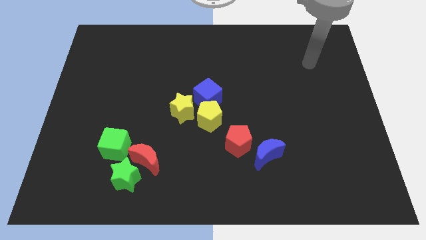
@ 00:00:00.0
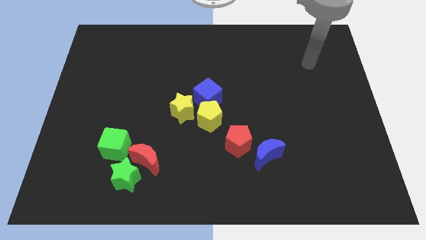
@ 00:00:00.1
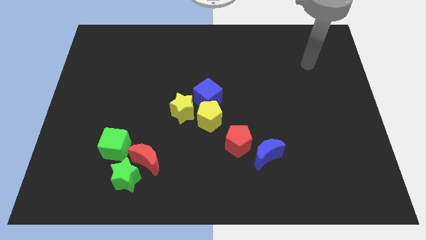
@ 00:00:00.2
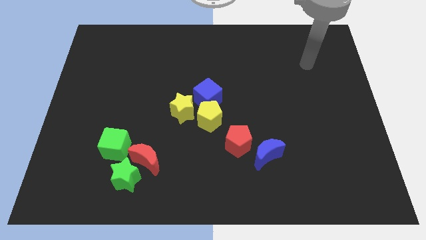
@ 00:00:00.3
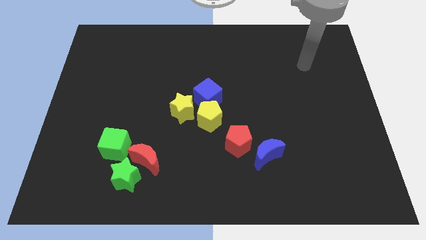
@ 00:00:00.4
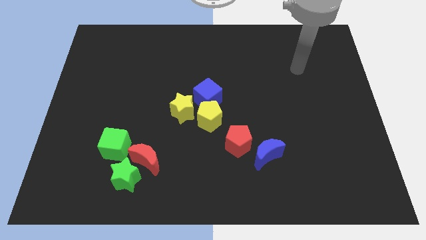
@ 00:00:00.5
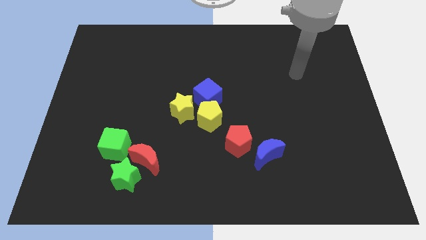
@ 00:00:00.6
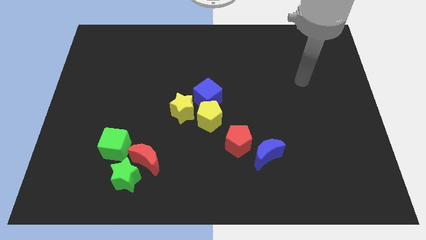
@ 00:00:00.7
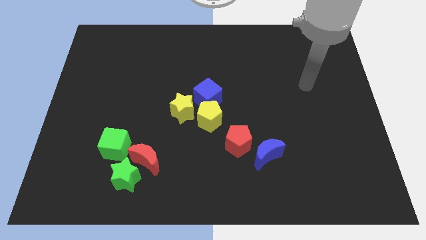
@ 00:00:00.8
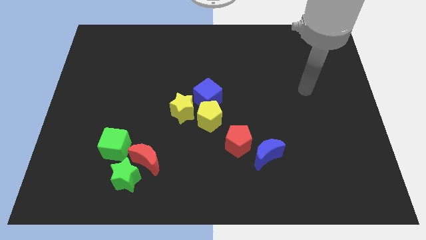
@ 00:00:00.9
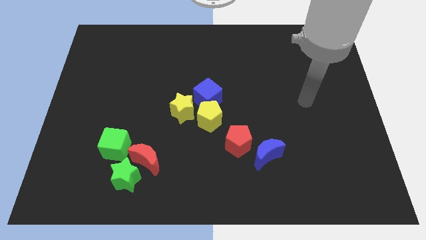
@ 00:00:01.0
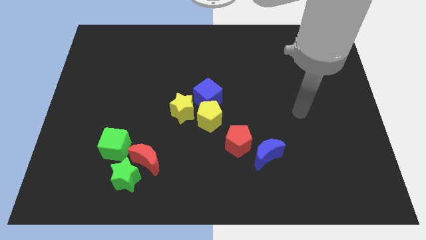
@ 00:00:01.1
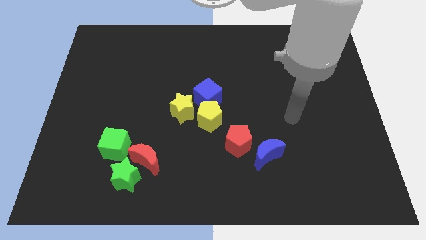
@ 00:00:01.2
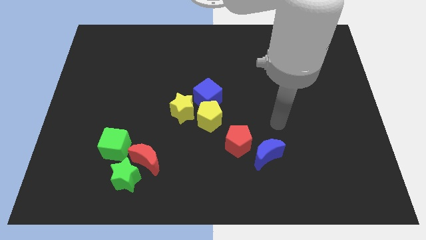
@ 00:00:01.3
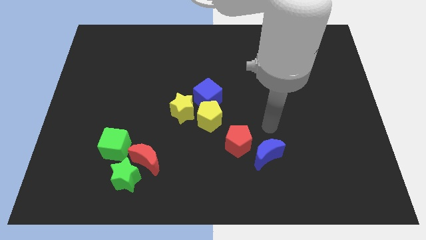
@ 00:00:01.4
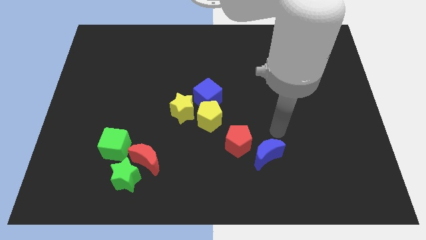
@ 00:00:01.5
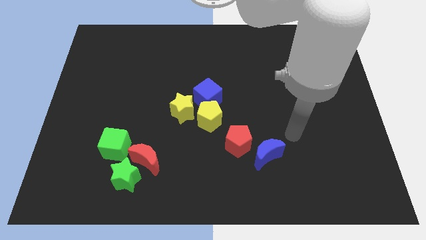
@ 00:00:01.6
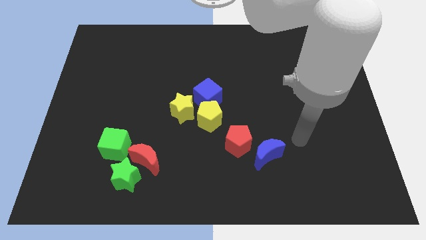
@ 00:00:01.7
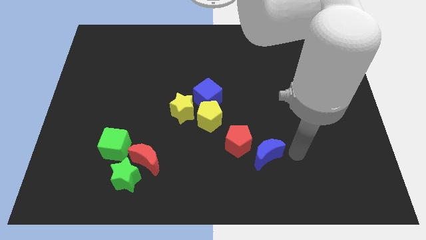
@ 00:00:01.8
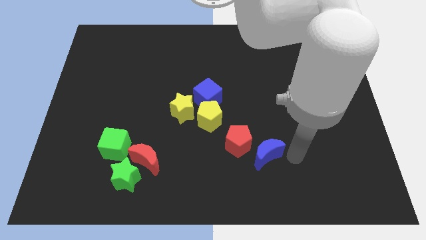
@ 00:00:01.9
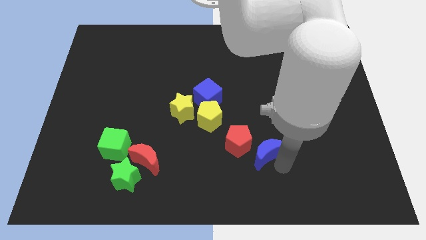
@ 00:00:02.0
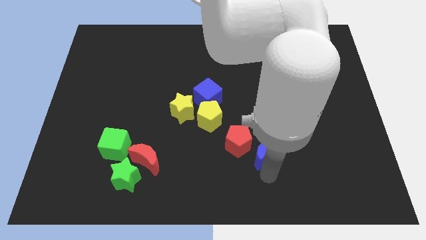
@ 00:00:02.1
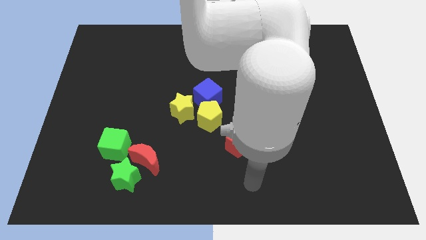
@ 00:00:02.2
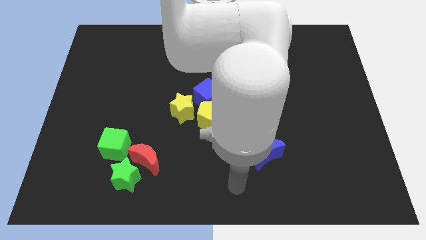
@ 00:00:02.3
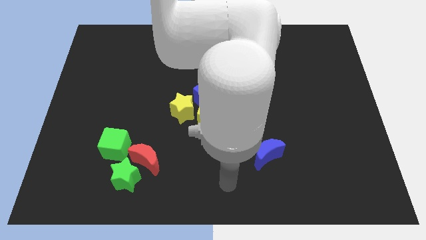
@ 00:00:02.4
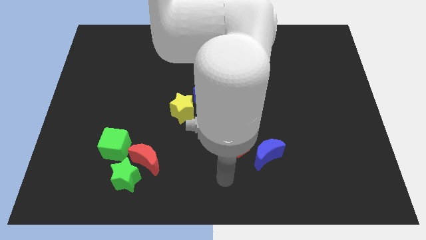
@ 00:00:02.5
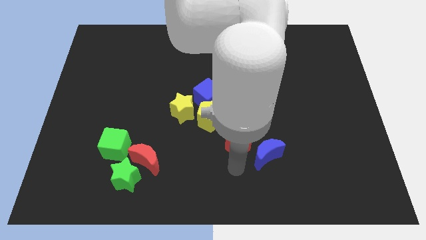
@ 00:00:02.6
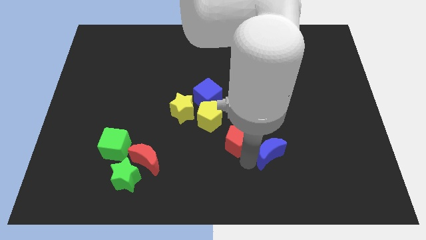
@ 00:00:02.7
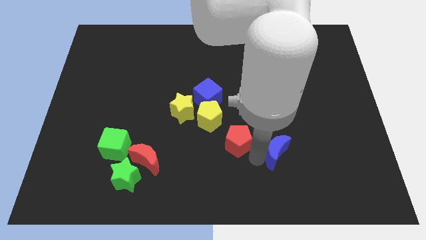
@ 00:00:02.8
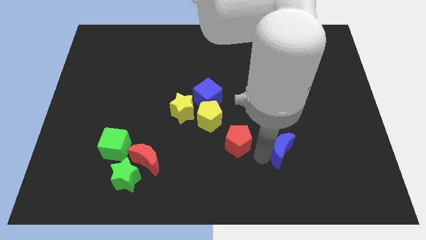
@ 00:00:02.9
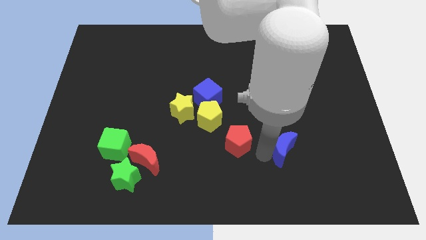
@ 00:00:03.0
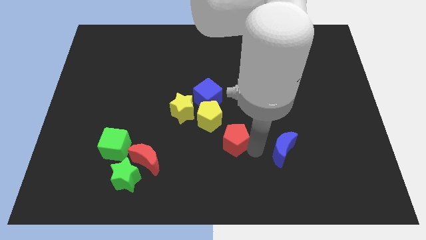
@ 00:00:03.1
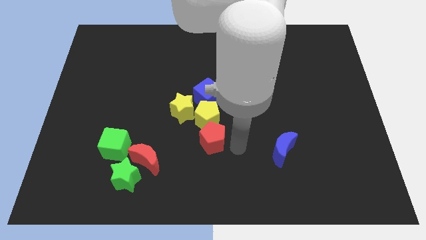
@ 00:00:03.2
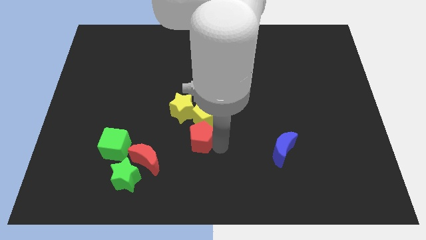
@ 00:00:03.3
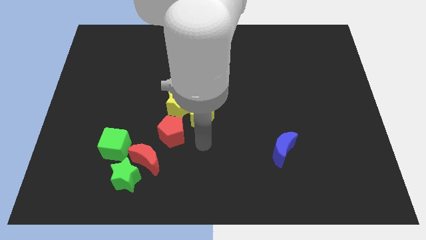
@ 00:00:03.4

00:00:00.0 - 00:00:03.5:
separate the red pentagon and the blue crescent

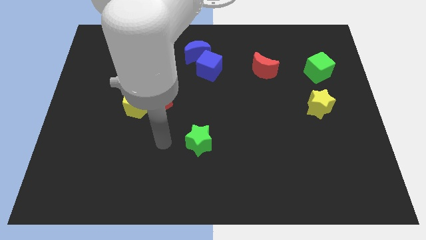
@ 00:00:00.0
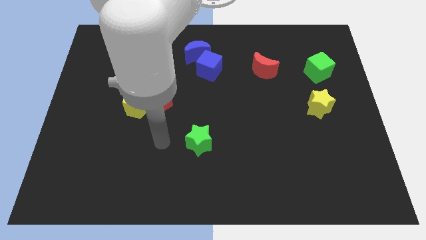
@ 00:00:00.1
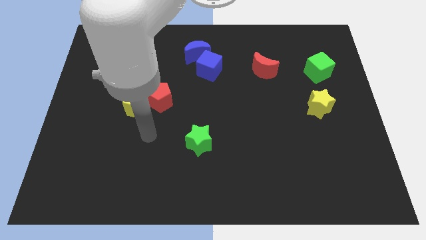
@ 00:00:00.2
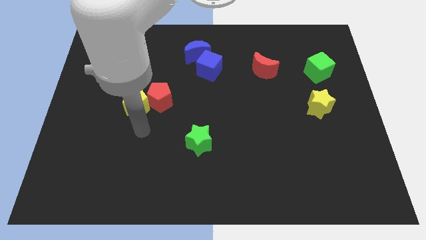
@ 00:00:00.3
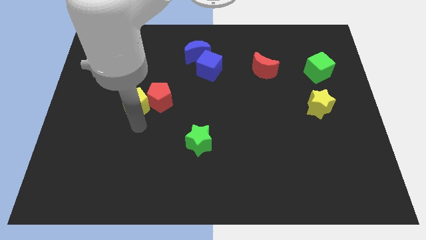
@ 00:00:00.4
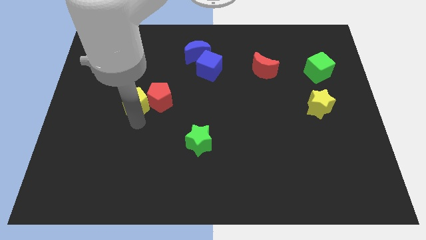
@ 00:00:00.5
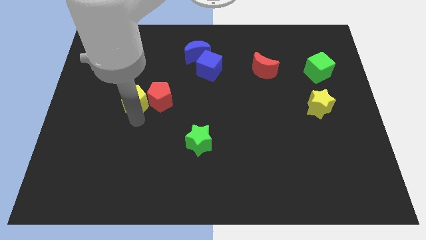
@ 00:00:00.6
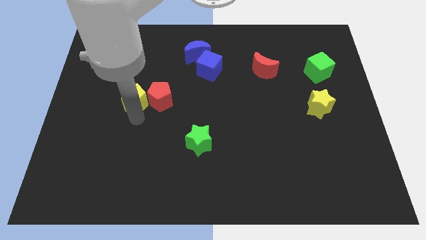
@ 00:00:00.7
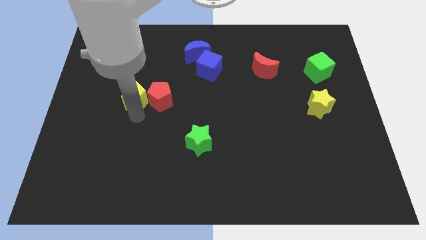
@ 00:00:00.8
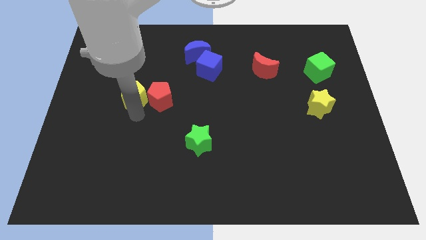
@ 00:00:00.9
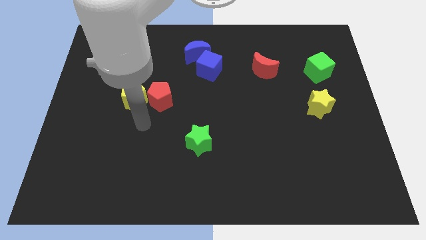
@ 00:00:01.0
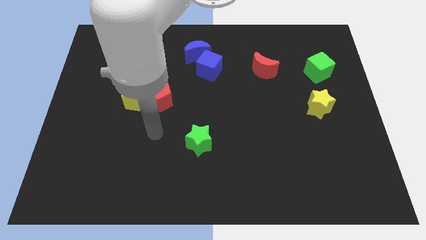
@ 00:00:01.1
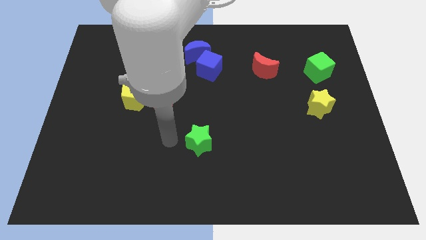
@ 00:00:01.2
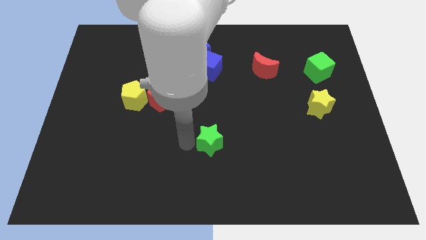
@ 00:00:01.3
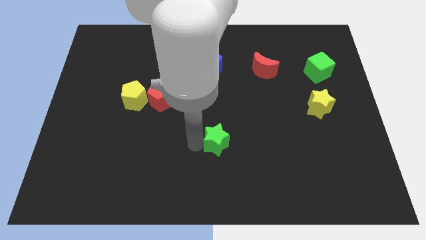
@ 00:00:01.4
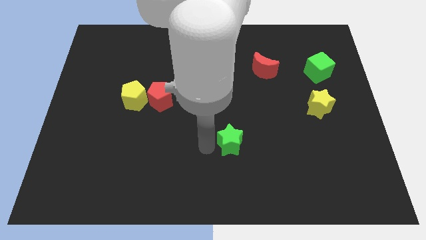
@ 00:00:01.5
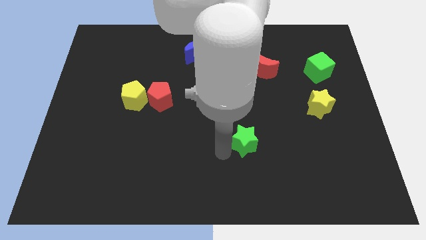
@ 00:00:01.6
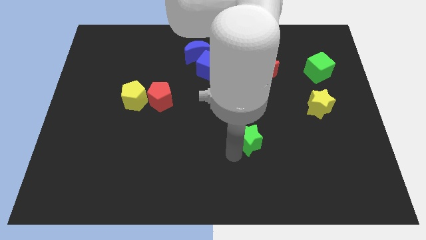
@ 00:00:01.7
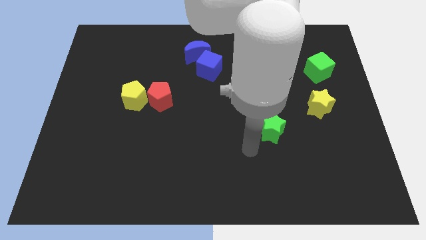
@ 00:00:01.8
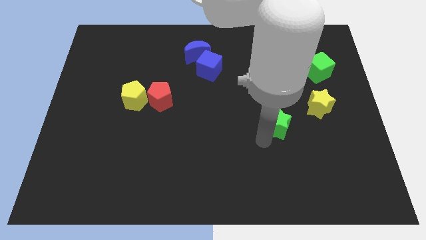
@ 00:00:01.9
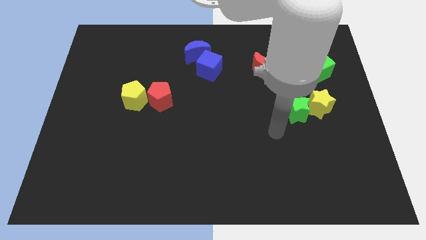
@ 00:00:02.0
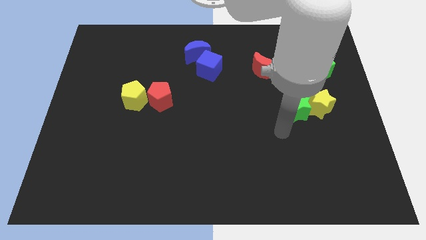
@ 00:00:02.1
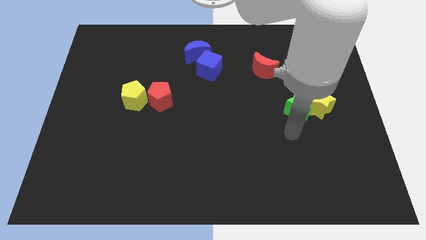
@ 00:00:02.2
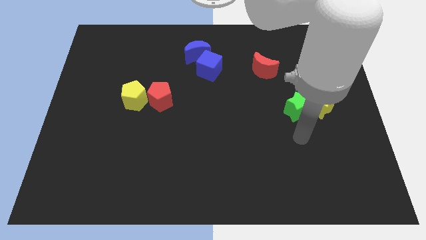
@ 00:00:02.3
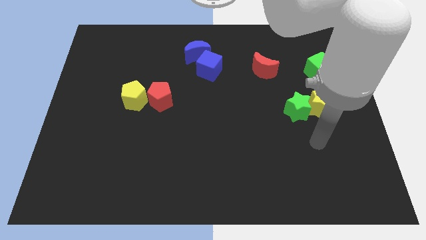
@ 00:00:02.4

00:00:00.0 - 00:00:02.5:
push the green star into the yellow star

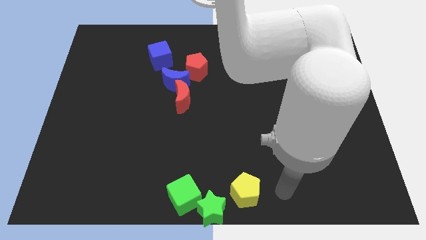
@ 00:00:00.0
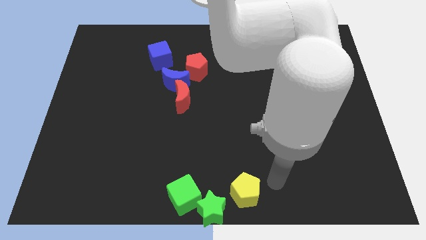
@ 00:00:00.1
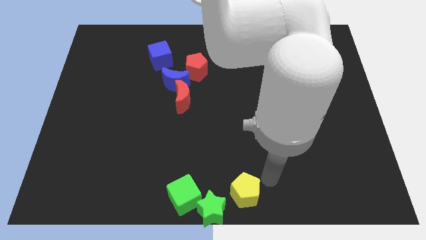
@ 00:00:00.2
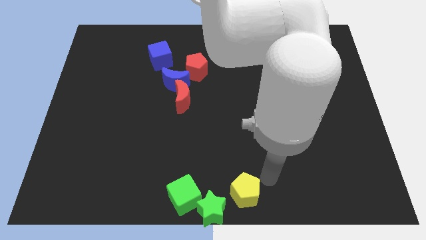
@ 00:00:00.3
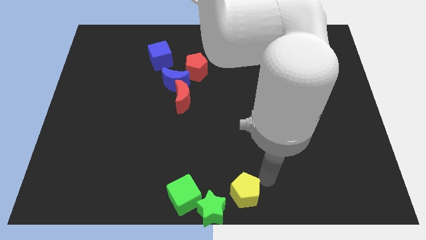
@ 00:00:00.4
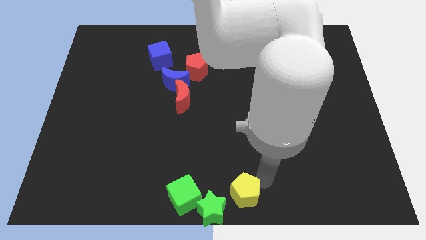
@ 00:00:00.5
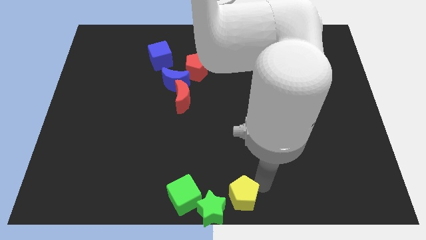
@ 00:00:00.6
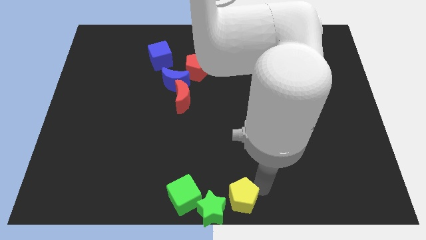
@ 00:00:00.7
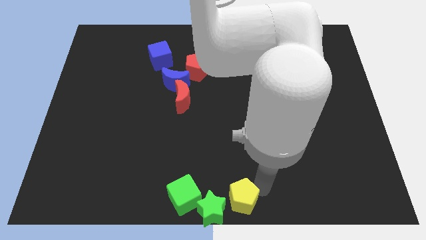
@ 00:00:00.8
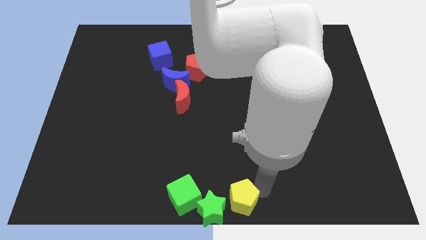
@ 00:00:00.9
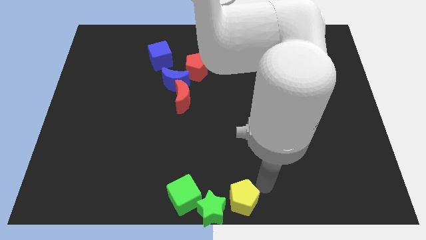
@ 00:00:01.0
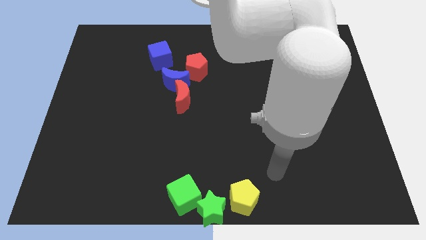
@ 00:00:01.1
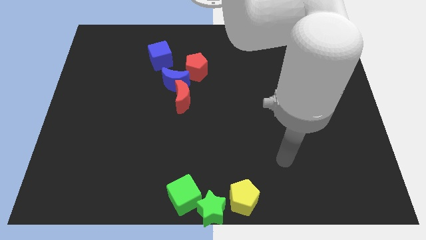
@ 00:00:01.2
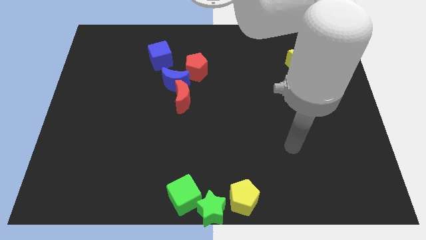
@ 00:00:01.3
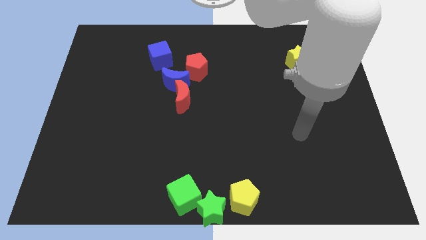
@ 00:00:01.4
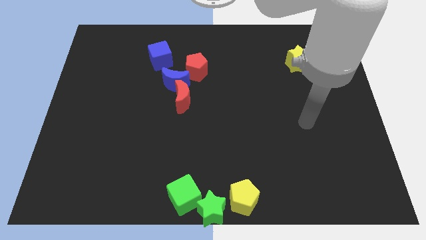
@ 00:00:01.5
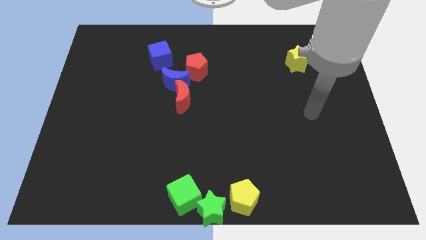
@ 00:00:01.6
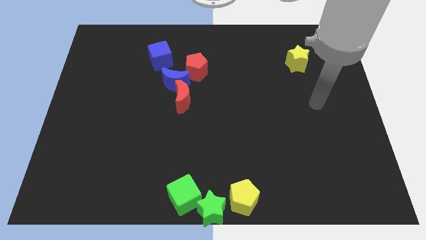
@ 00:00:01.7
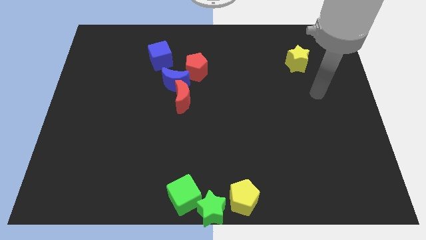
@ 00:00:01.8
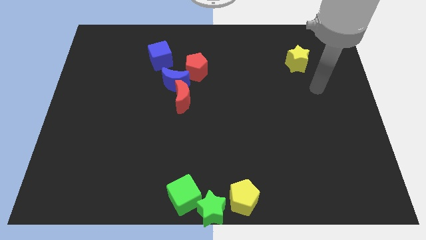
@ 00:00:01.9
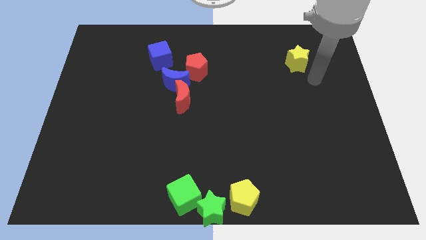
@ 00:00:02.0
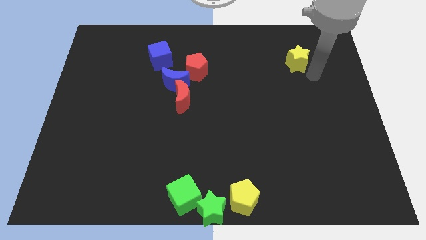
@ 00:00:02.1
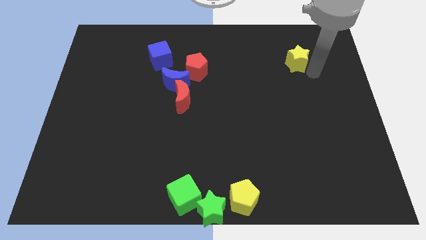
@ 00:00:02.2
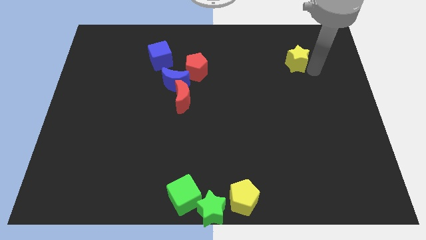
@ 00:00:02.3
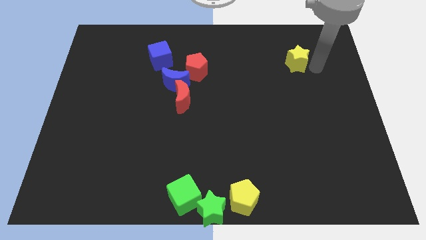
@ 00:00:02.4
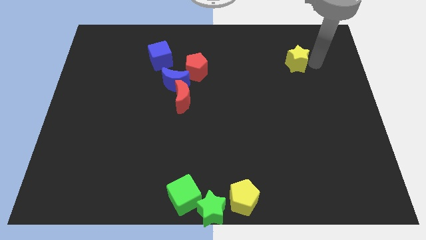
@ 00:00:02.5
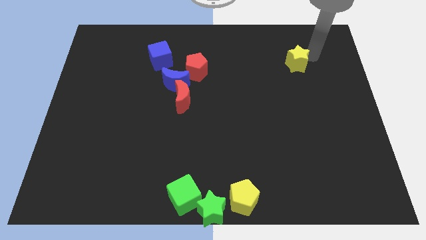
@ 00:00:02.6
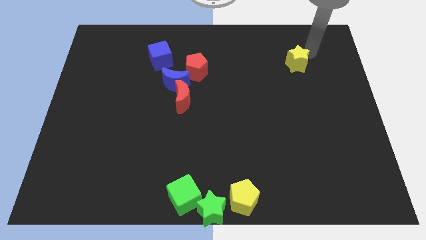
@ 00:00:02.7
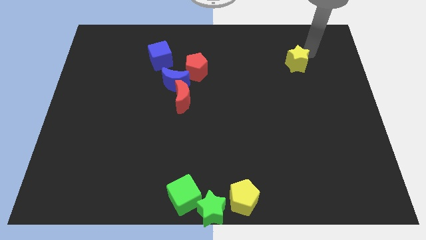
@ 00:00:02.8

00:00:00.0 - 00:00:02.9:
place the arm near the yellow star
